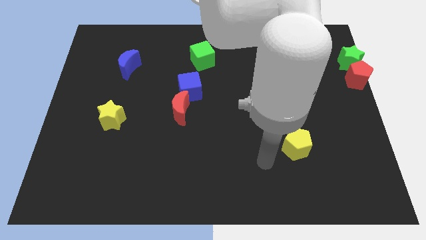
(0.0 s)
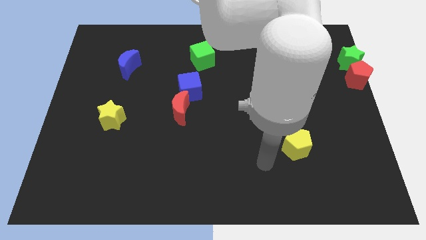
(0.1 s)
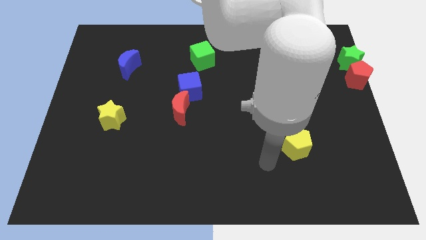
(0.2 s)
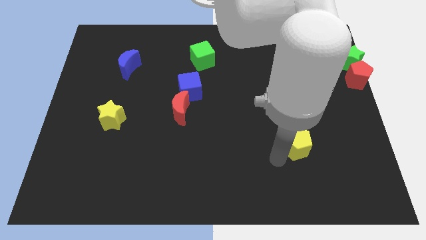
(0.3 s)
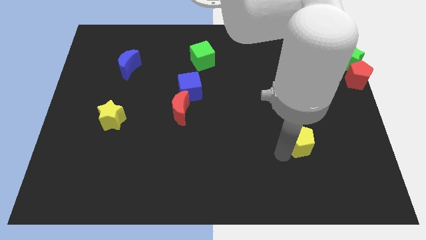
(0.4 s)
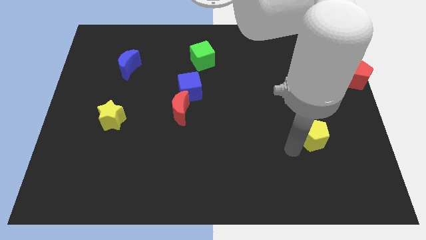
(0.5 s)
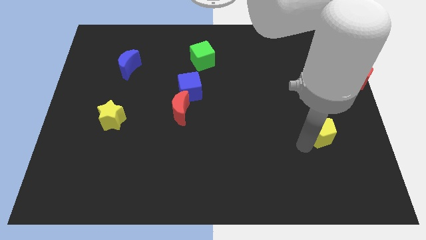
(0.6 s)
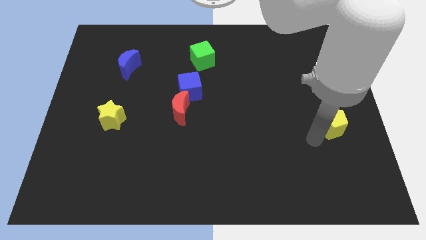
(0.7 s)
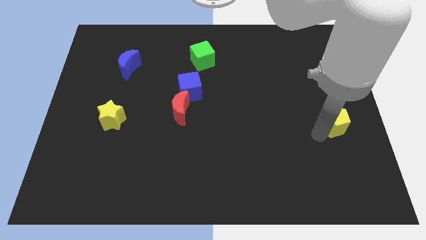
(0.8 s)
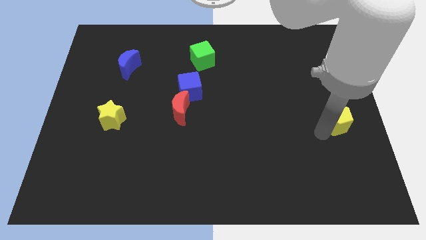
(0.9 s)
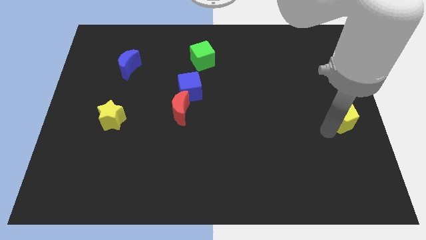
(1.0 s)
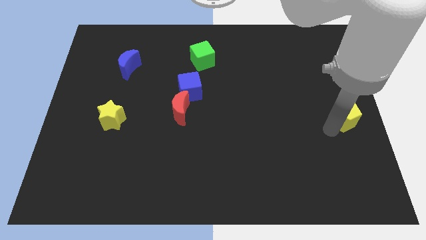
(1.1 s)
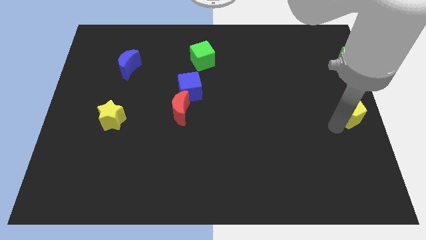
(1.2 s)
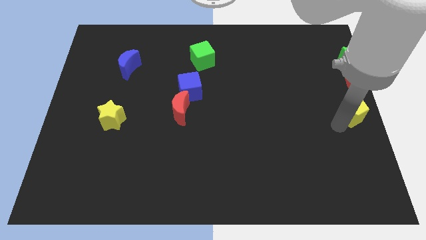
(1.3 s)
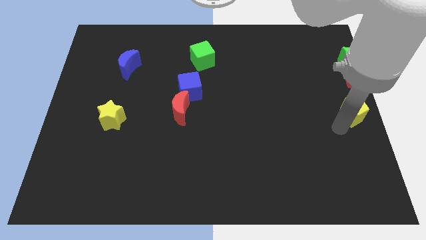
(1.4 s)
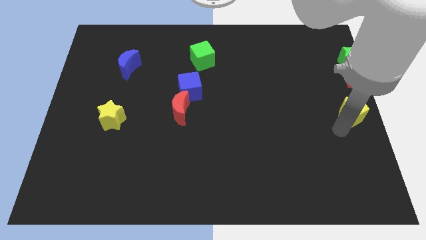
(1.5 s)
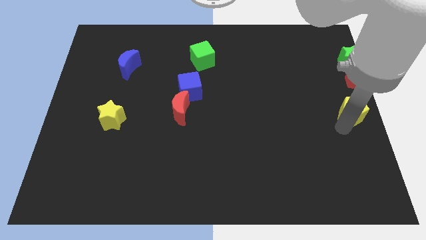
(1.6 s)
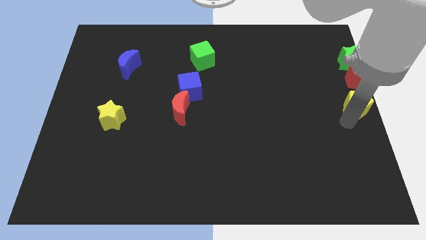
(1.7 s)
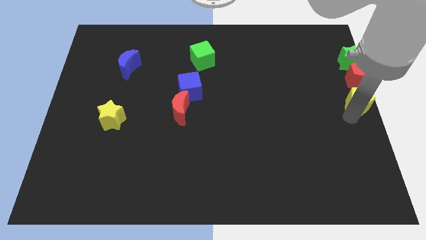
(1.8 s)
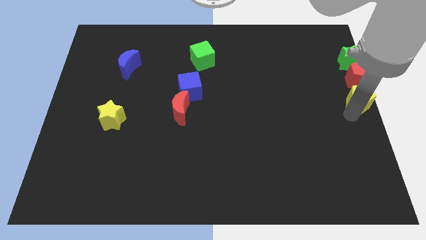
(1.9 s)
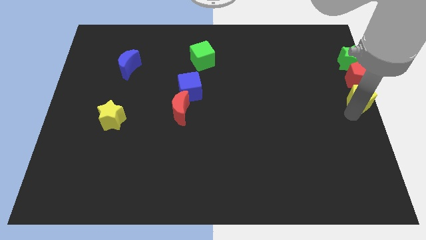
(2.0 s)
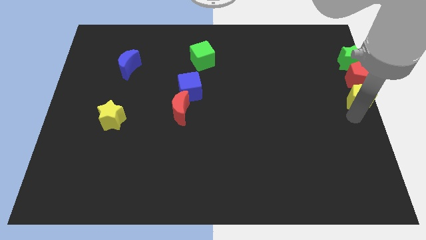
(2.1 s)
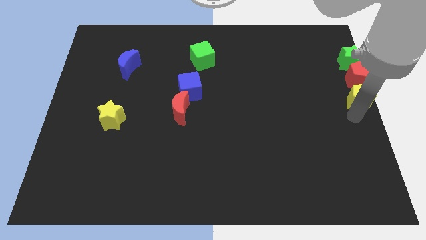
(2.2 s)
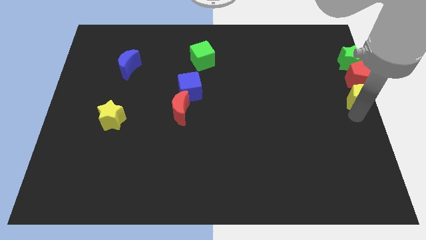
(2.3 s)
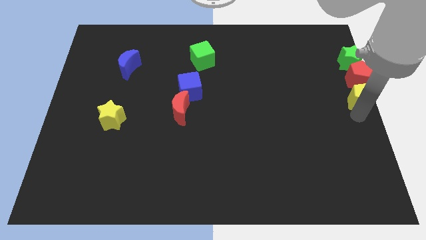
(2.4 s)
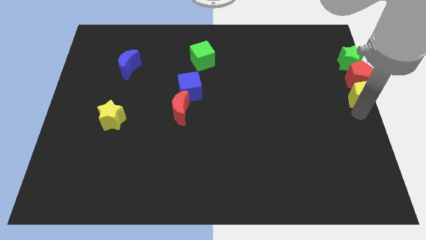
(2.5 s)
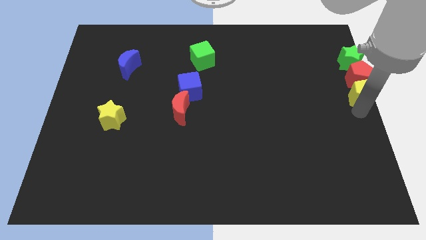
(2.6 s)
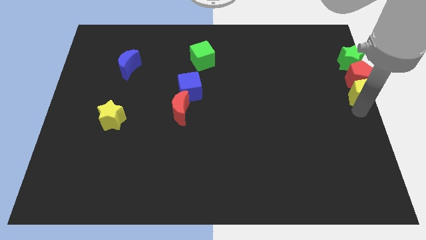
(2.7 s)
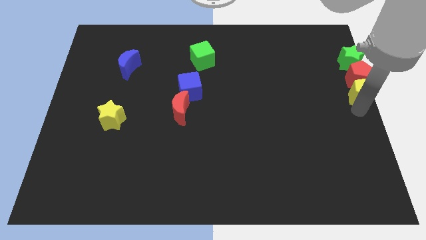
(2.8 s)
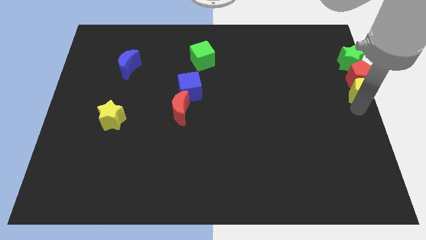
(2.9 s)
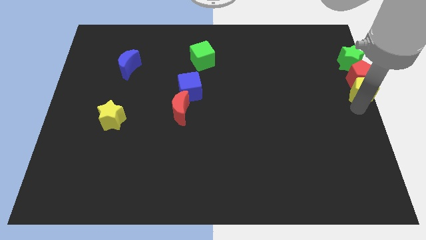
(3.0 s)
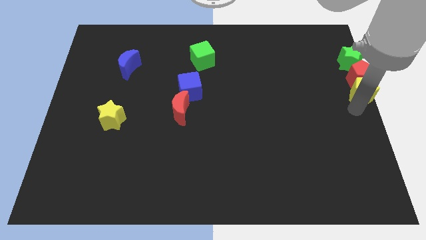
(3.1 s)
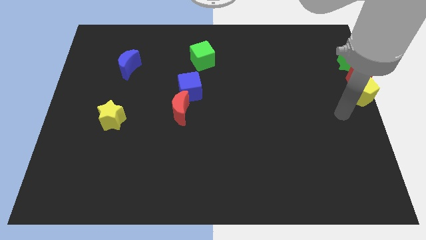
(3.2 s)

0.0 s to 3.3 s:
move the yellow pentagon to the bottom of the red pentagon

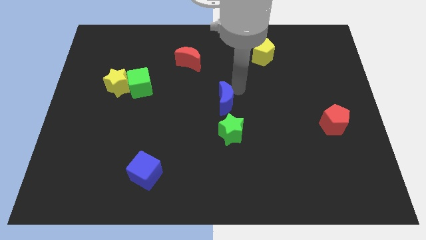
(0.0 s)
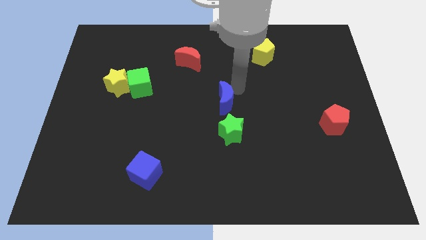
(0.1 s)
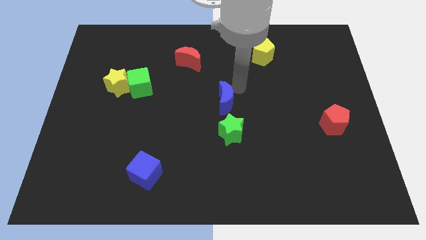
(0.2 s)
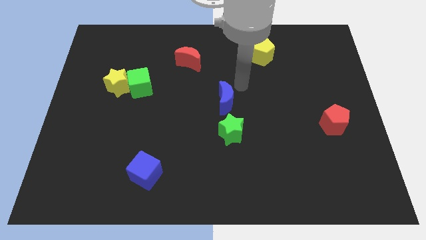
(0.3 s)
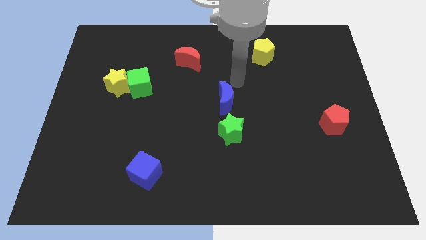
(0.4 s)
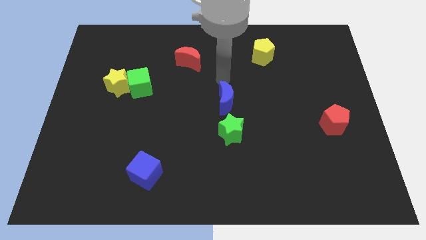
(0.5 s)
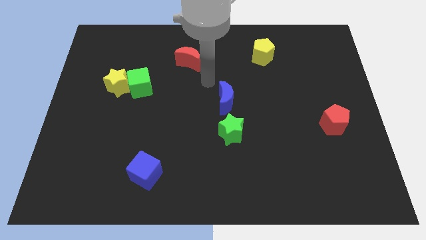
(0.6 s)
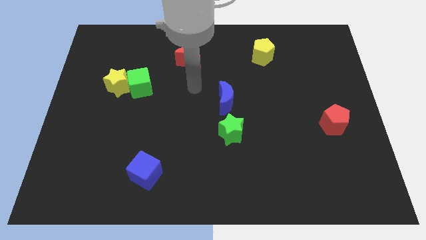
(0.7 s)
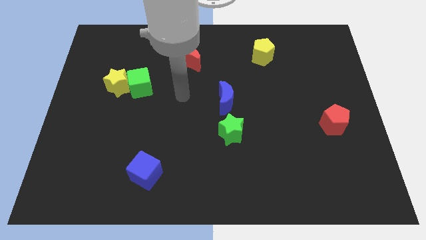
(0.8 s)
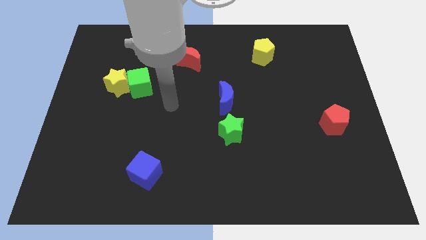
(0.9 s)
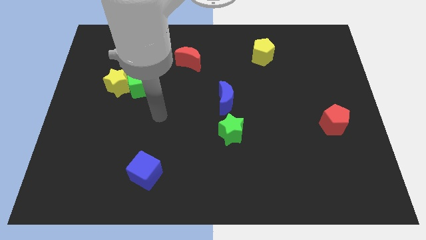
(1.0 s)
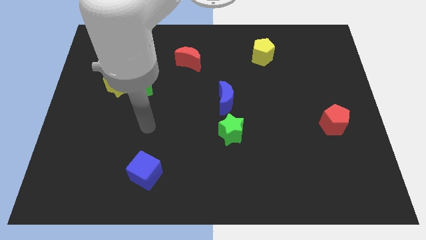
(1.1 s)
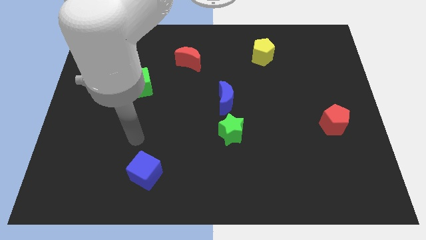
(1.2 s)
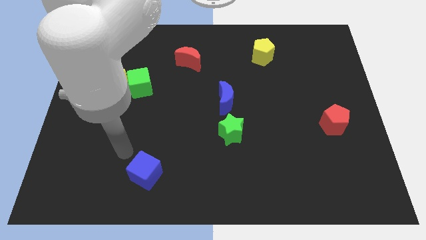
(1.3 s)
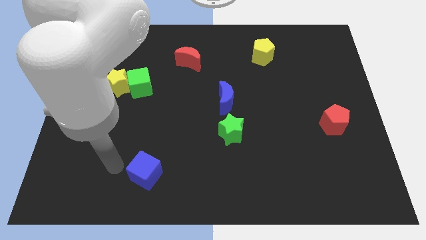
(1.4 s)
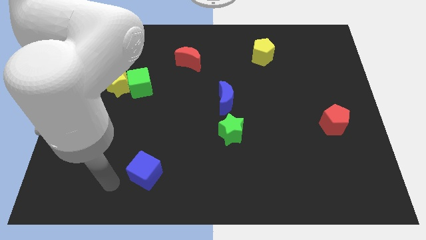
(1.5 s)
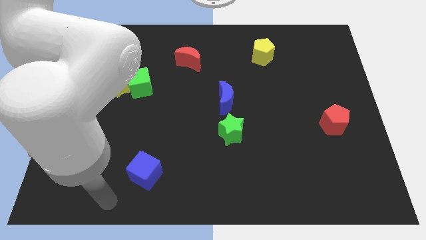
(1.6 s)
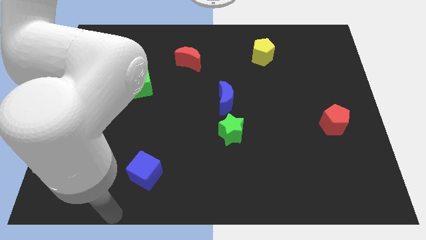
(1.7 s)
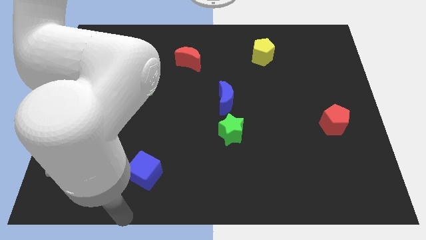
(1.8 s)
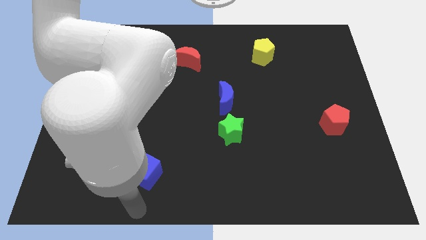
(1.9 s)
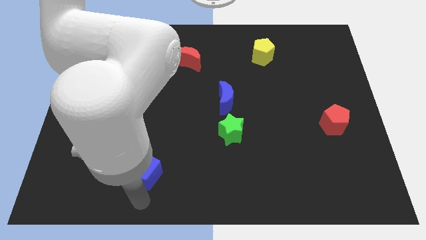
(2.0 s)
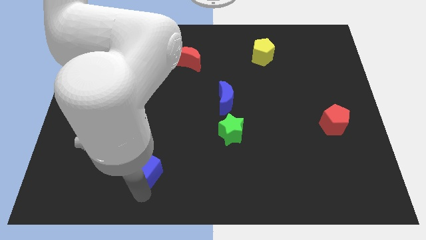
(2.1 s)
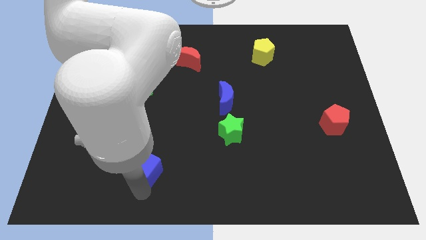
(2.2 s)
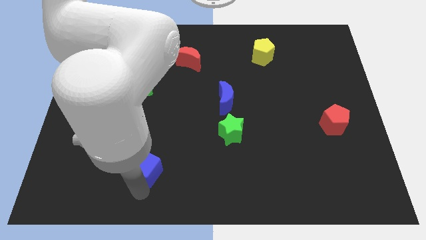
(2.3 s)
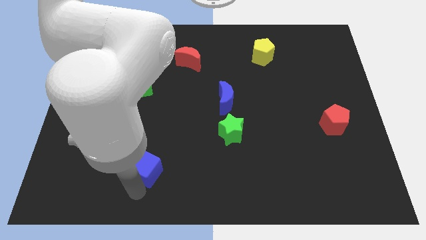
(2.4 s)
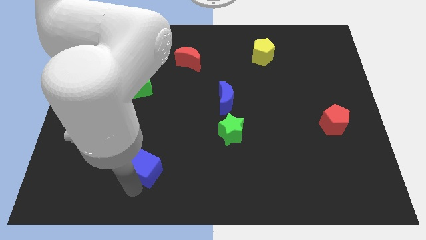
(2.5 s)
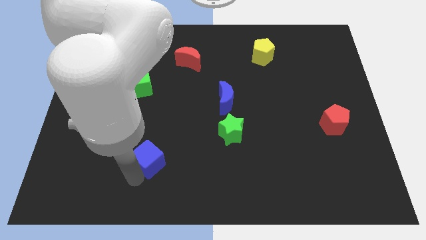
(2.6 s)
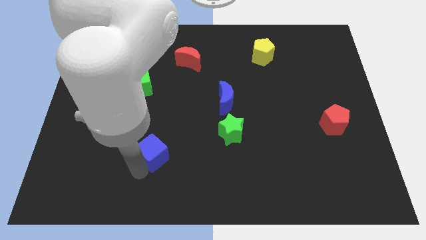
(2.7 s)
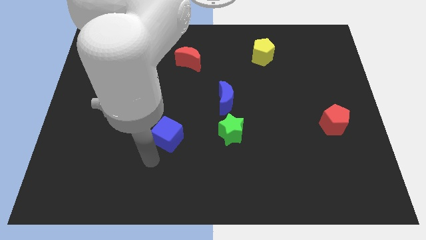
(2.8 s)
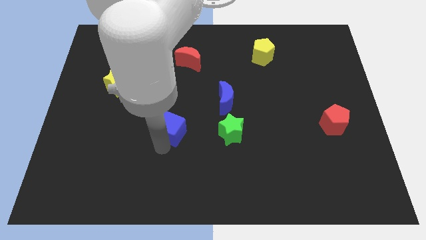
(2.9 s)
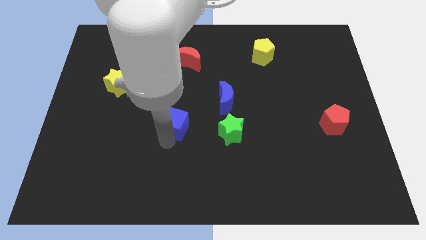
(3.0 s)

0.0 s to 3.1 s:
place blue cube to the left of green star

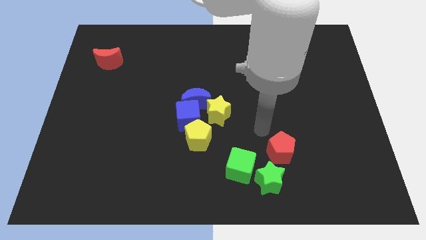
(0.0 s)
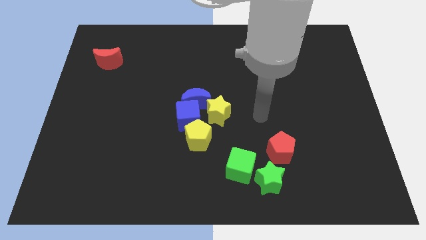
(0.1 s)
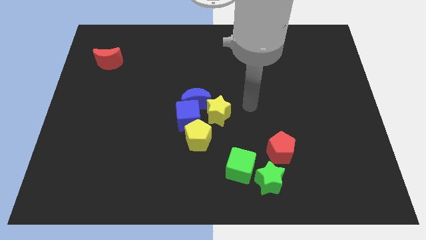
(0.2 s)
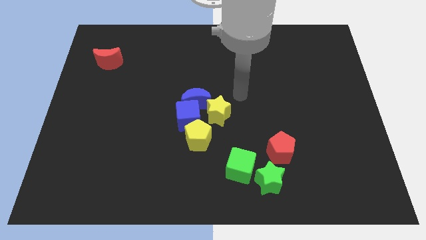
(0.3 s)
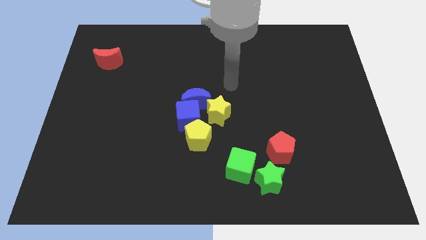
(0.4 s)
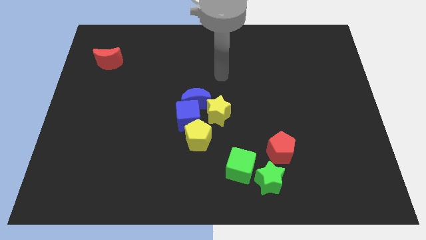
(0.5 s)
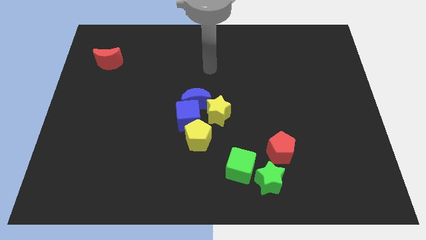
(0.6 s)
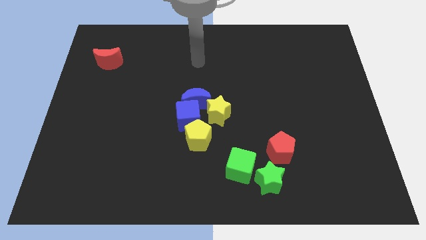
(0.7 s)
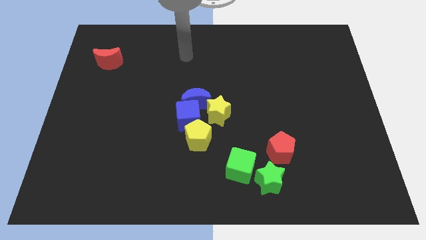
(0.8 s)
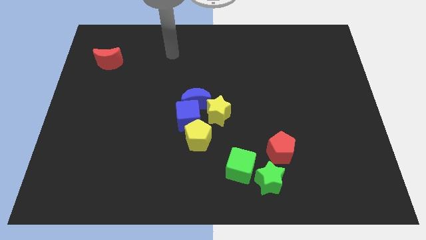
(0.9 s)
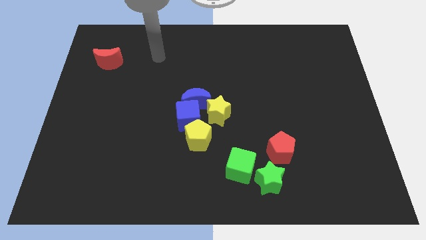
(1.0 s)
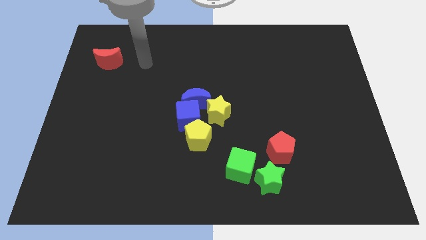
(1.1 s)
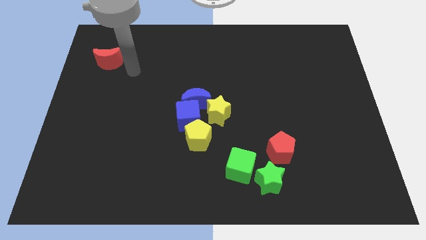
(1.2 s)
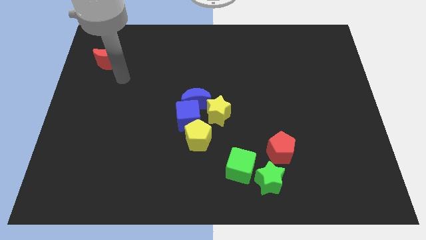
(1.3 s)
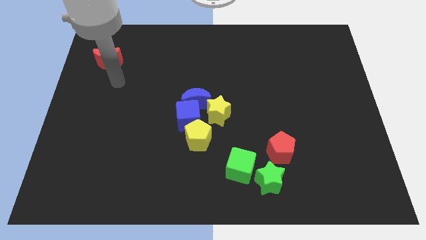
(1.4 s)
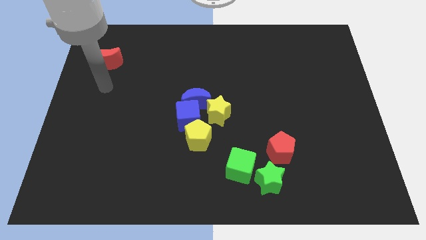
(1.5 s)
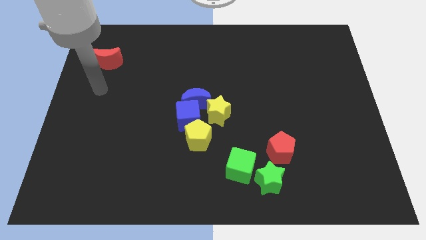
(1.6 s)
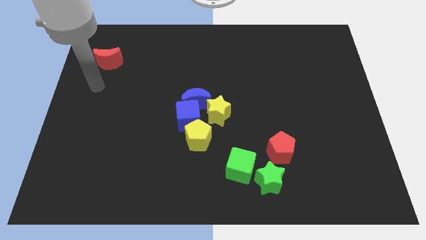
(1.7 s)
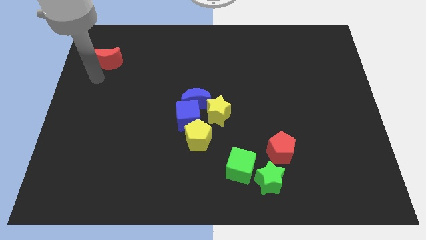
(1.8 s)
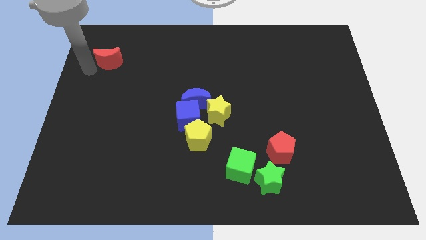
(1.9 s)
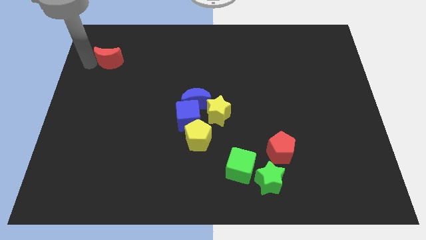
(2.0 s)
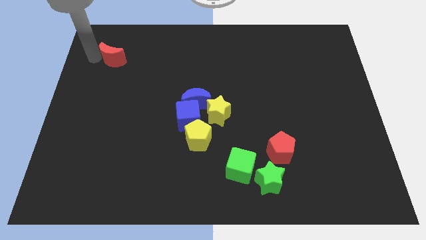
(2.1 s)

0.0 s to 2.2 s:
point your arm to the left of the red crescent

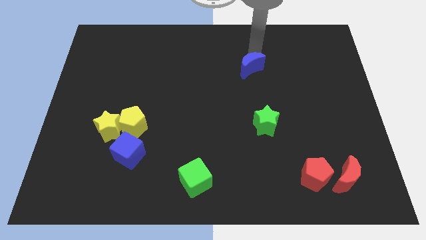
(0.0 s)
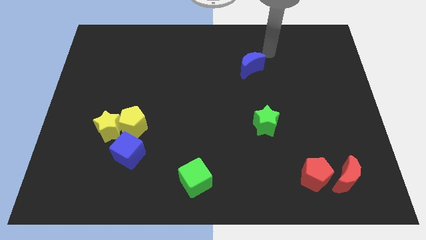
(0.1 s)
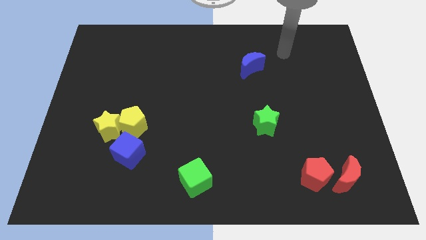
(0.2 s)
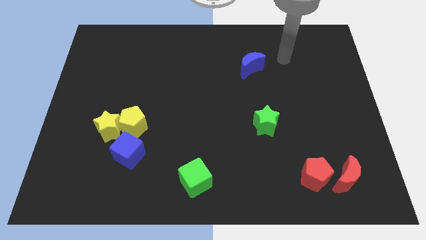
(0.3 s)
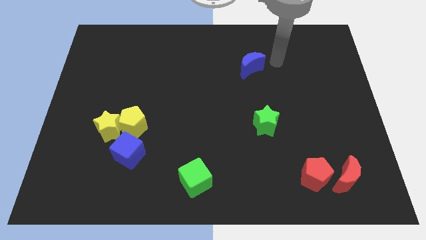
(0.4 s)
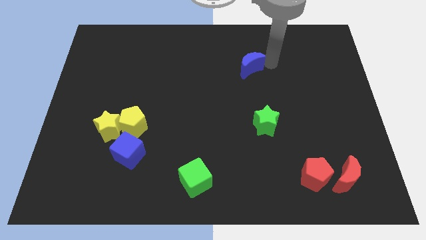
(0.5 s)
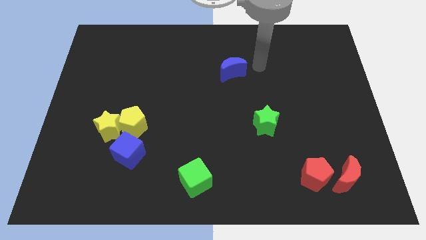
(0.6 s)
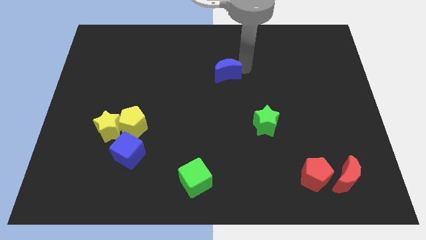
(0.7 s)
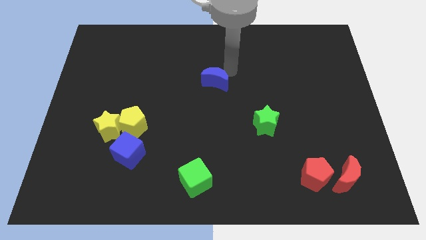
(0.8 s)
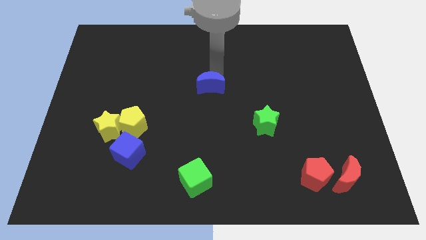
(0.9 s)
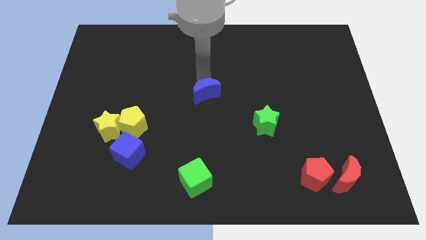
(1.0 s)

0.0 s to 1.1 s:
place the blue crescent at center of the board
